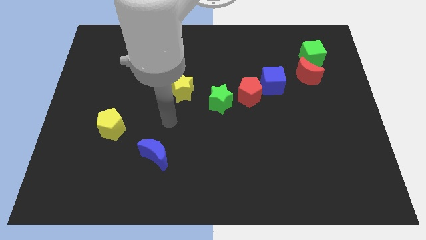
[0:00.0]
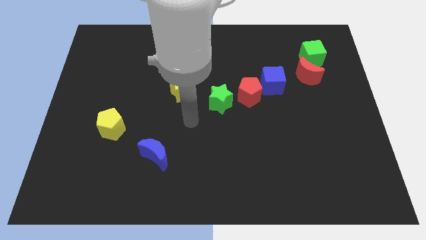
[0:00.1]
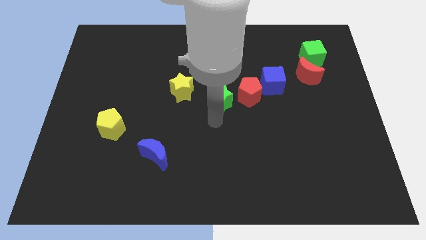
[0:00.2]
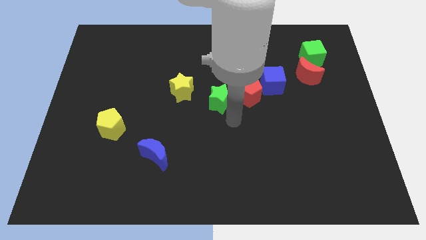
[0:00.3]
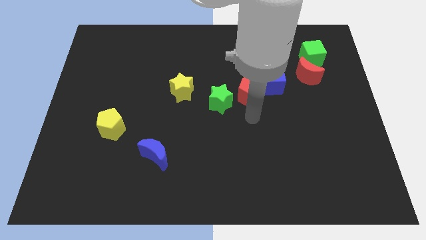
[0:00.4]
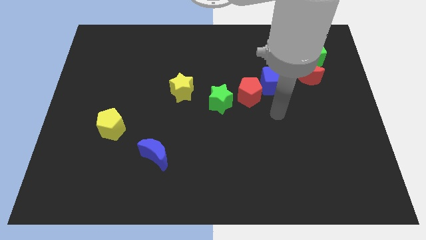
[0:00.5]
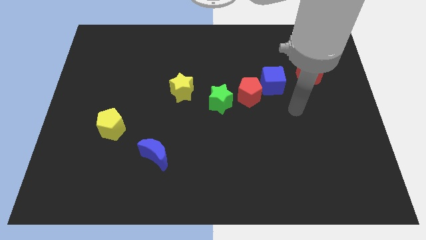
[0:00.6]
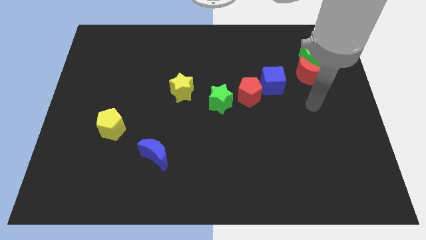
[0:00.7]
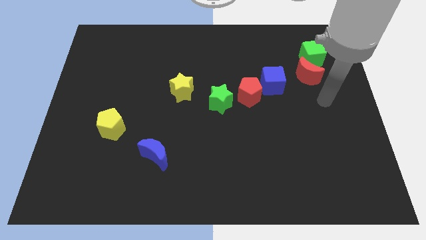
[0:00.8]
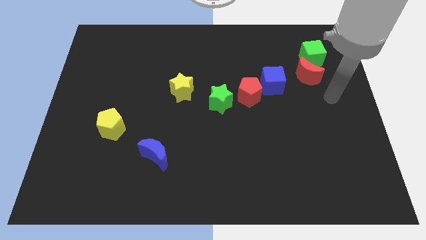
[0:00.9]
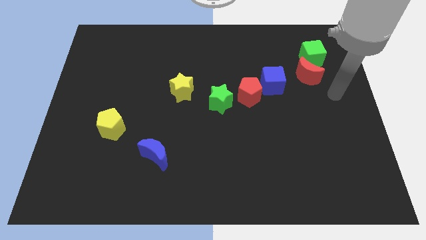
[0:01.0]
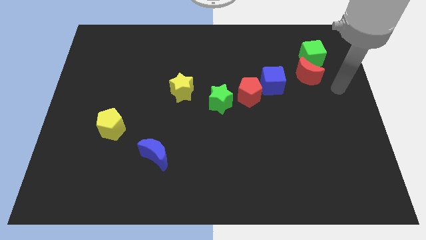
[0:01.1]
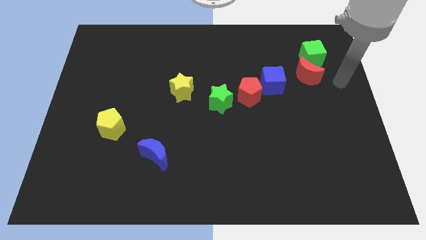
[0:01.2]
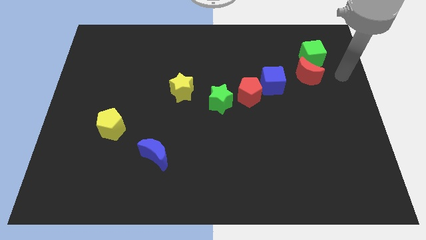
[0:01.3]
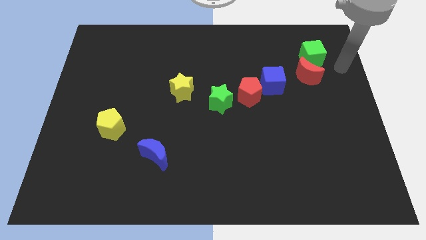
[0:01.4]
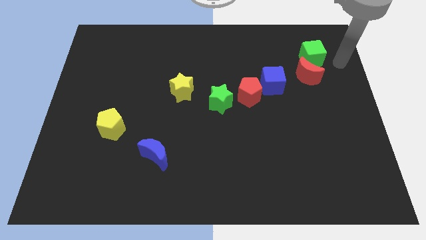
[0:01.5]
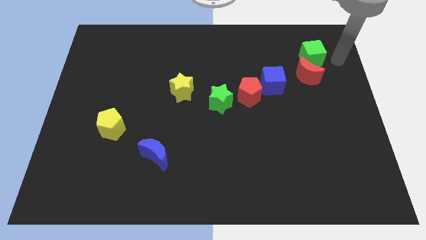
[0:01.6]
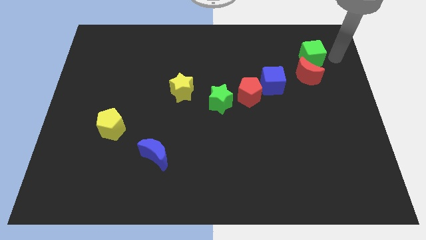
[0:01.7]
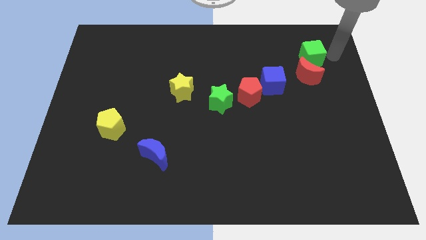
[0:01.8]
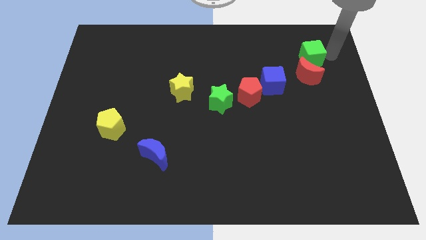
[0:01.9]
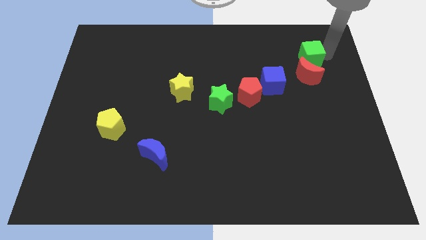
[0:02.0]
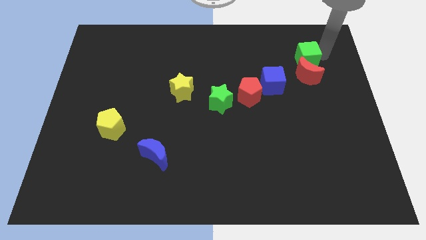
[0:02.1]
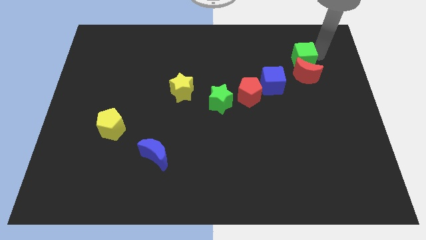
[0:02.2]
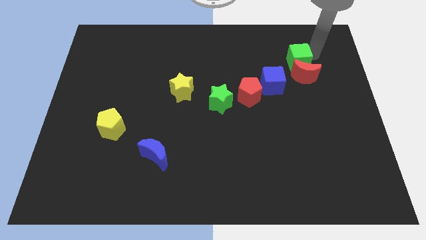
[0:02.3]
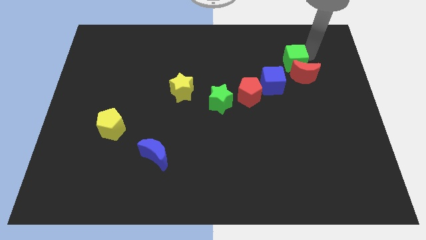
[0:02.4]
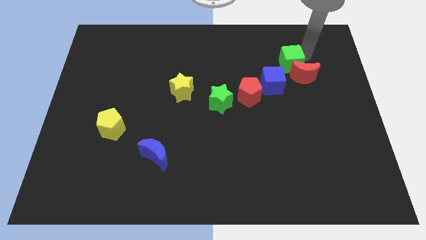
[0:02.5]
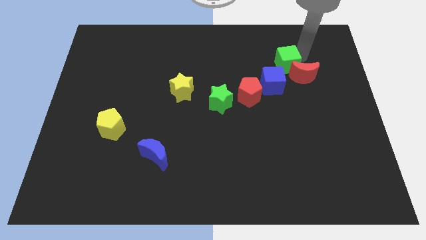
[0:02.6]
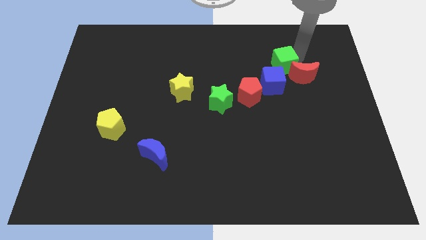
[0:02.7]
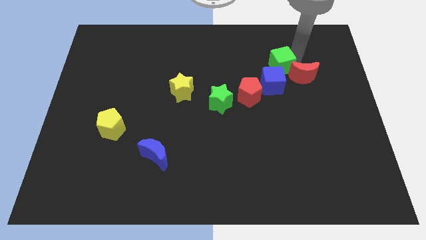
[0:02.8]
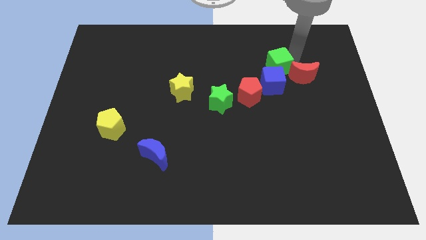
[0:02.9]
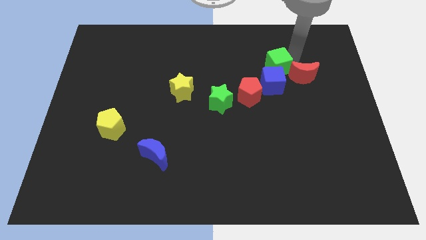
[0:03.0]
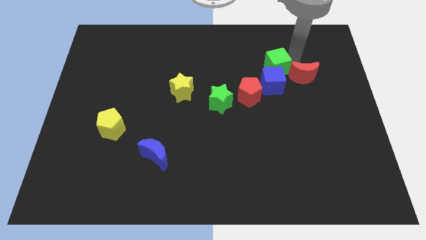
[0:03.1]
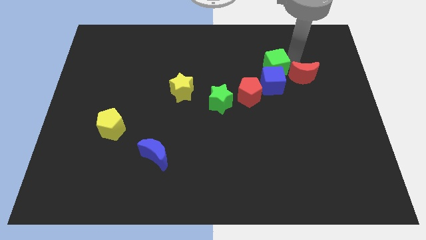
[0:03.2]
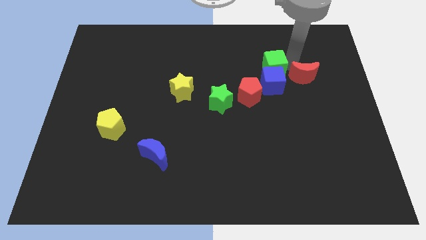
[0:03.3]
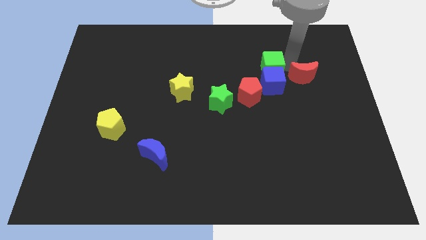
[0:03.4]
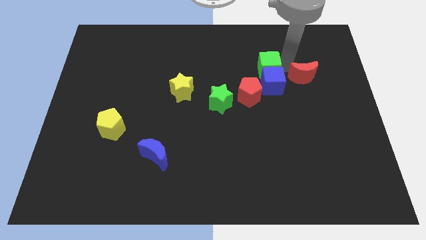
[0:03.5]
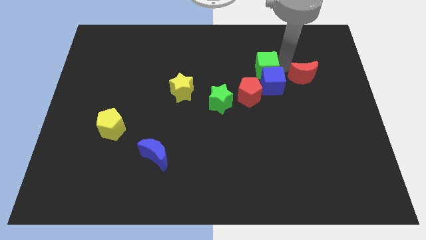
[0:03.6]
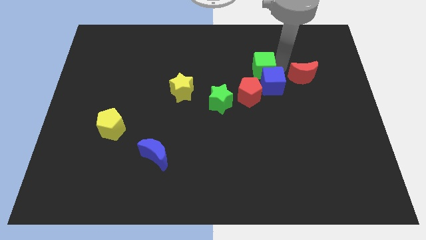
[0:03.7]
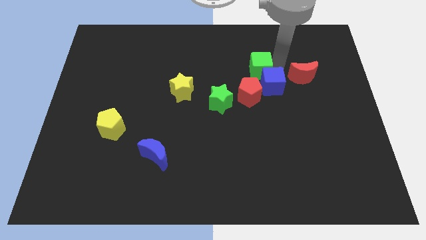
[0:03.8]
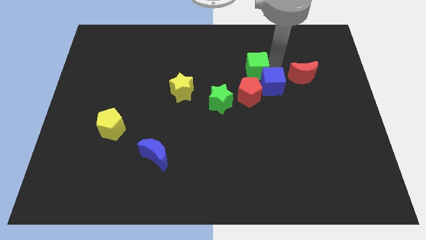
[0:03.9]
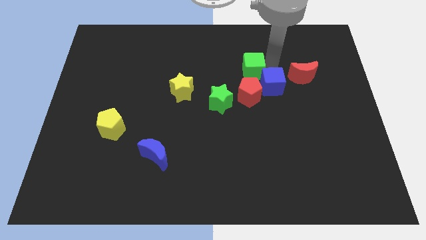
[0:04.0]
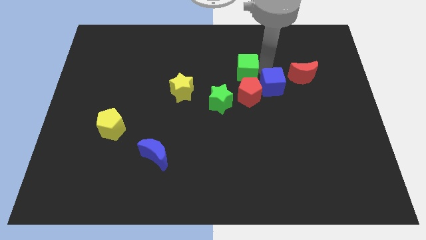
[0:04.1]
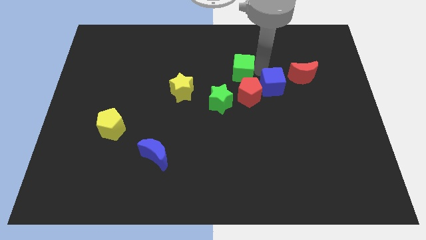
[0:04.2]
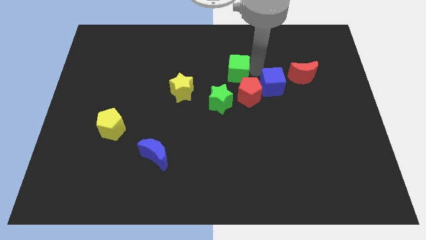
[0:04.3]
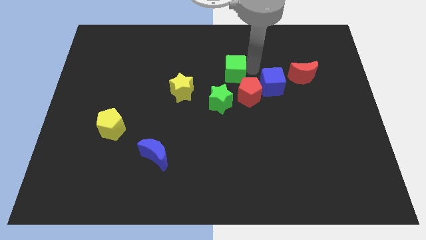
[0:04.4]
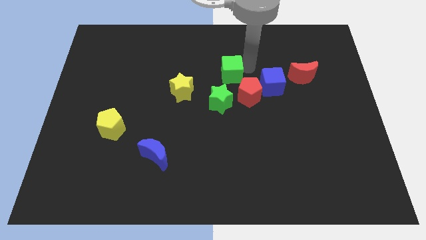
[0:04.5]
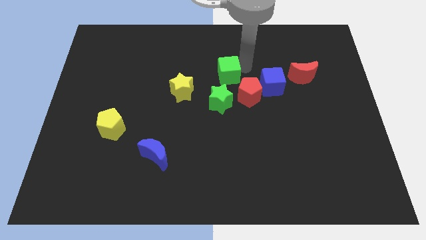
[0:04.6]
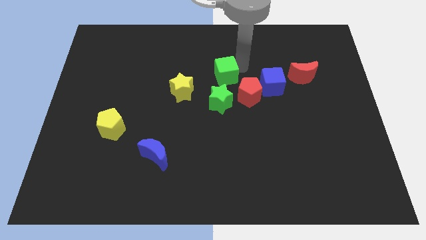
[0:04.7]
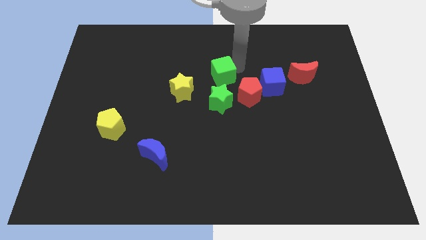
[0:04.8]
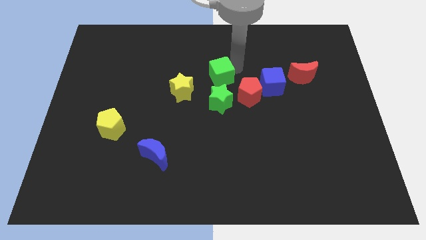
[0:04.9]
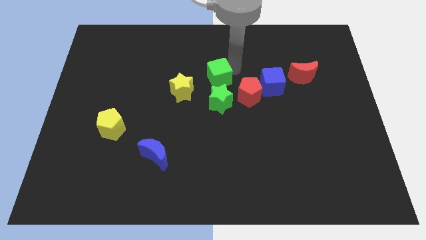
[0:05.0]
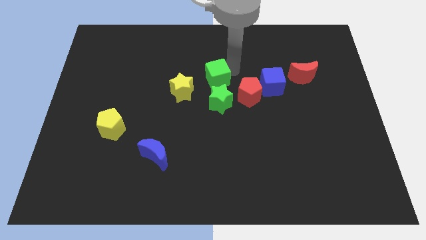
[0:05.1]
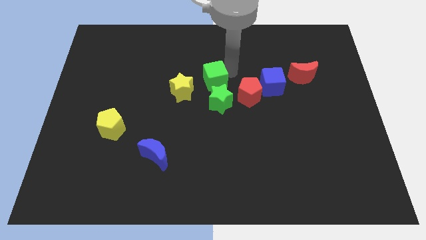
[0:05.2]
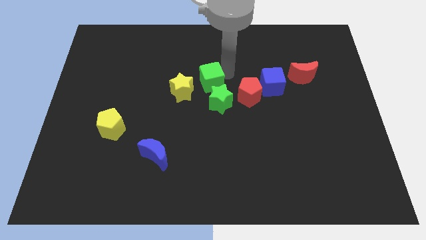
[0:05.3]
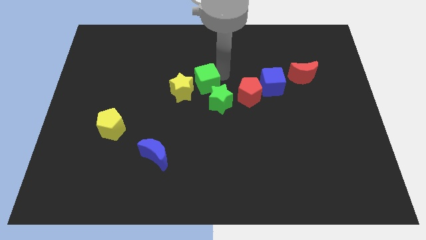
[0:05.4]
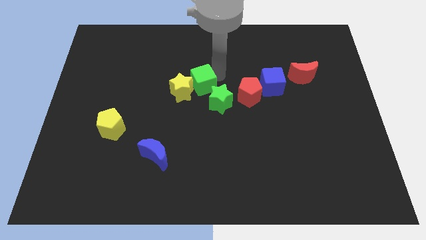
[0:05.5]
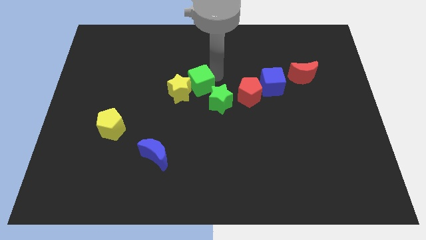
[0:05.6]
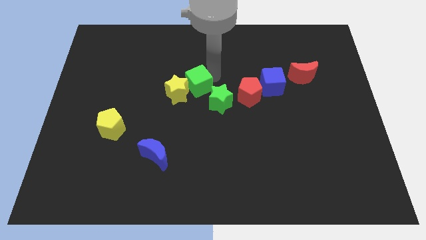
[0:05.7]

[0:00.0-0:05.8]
push the green cube next to the yellow star

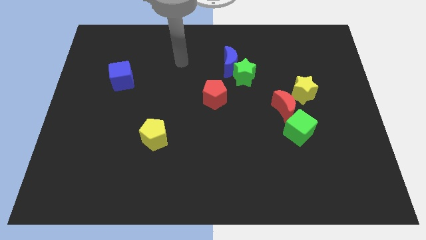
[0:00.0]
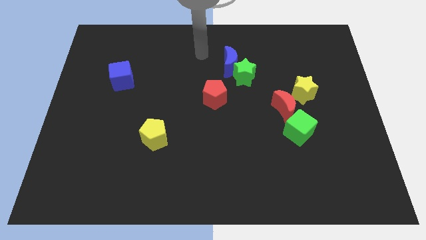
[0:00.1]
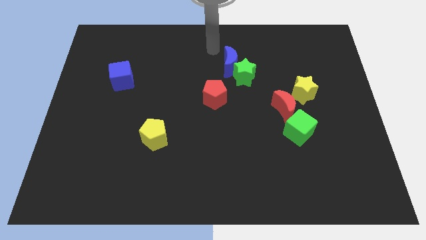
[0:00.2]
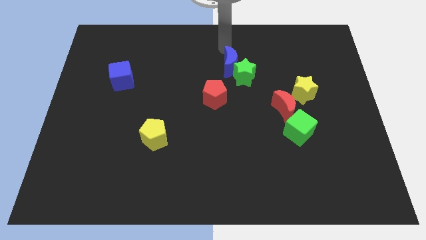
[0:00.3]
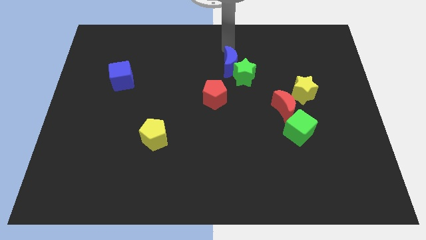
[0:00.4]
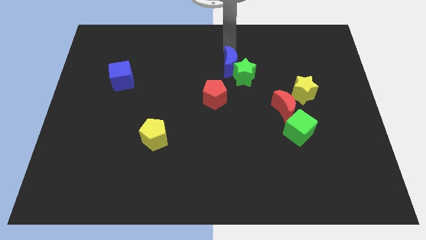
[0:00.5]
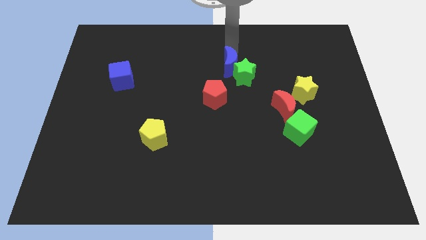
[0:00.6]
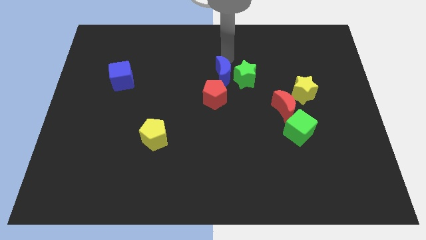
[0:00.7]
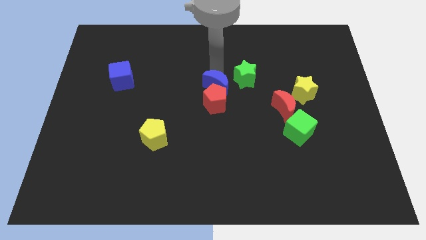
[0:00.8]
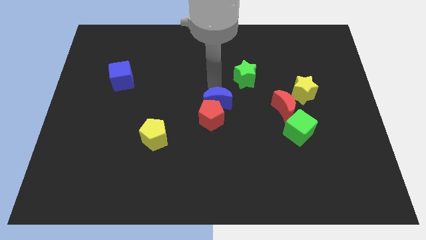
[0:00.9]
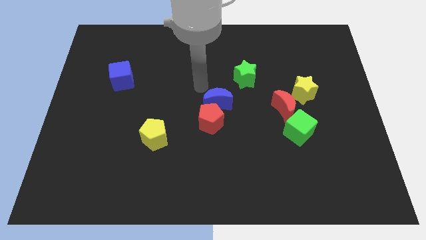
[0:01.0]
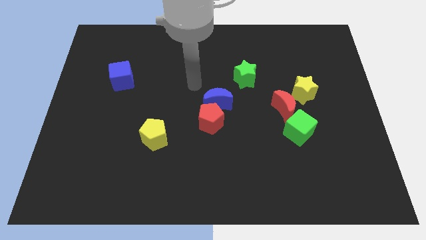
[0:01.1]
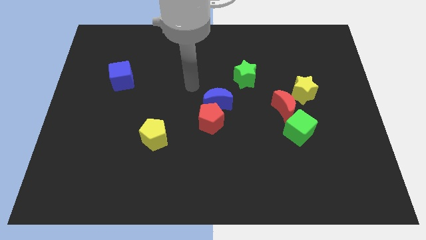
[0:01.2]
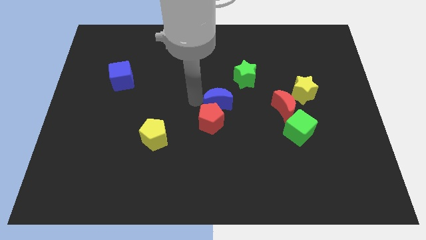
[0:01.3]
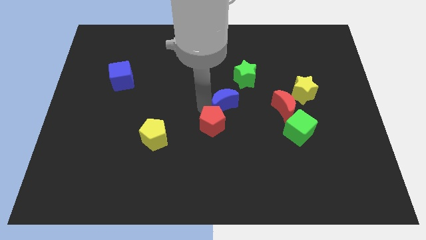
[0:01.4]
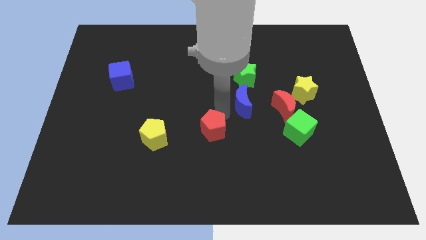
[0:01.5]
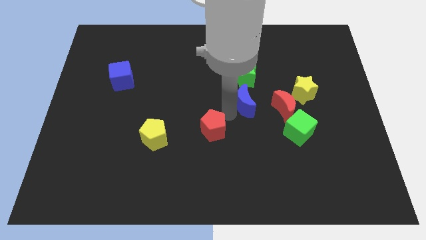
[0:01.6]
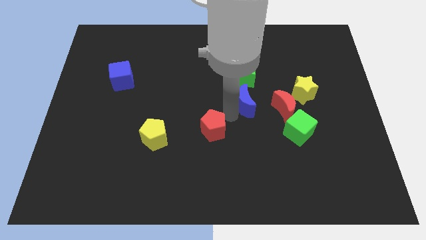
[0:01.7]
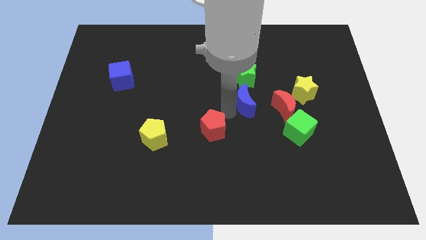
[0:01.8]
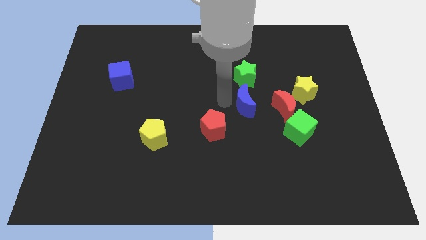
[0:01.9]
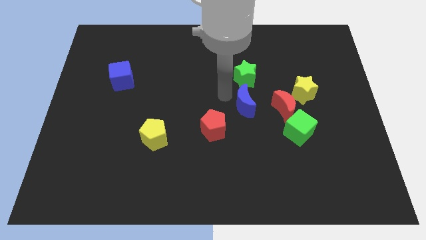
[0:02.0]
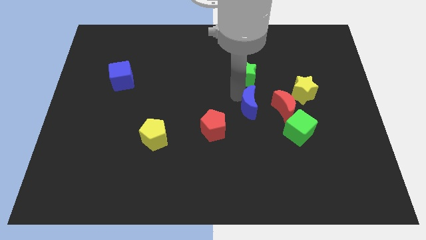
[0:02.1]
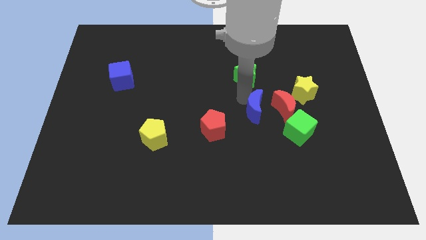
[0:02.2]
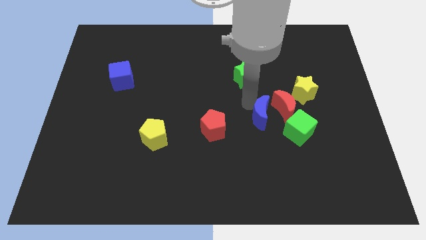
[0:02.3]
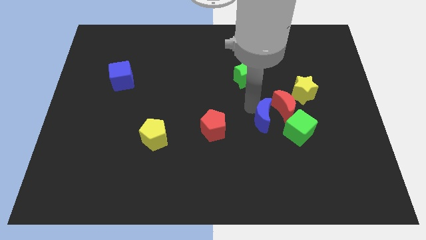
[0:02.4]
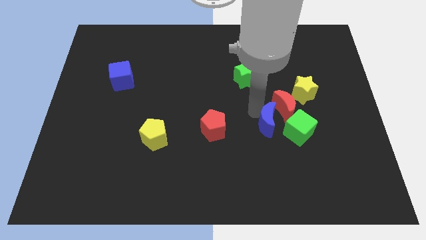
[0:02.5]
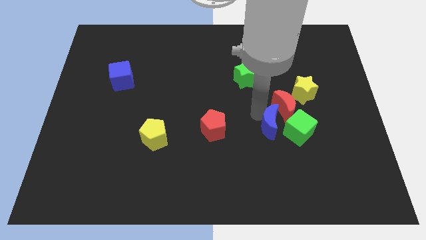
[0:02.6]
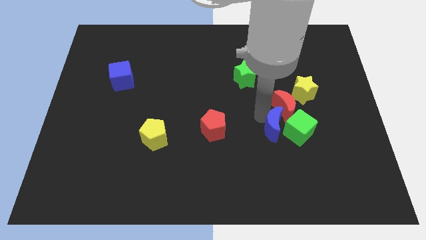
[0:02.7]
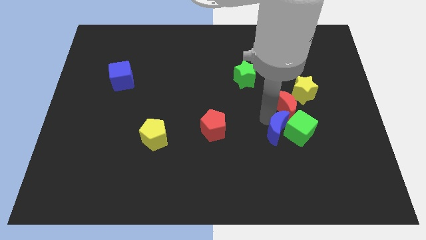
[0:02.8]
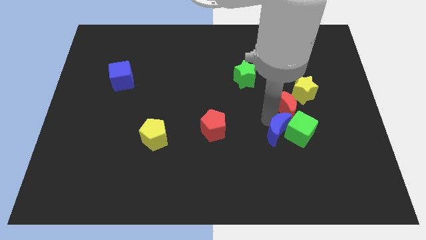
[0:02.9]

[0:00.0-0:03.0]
slide the blue moon towards the green cube
